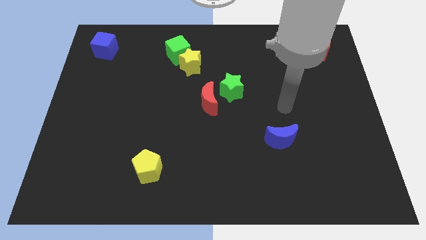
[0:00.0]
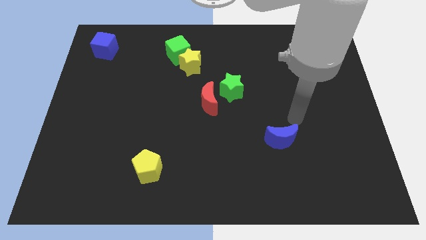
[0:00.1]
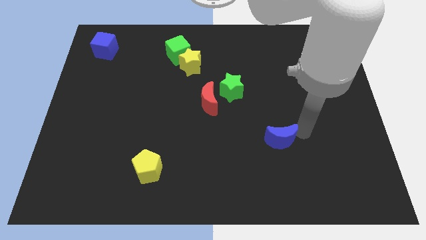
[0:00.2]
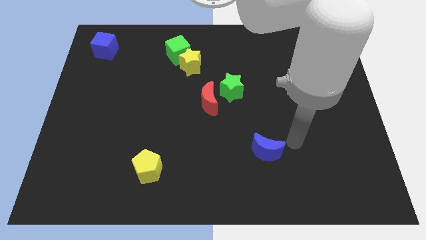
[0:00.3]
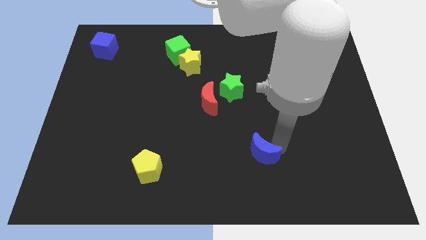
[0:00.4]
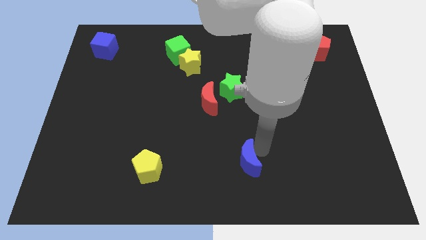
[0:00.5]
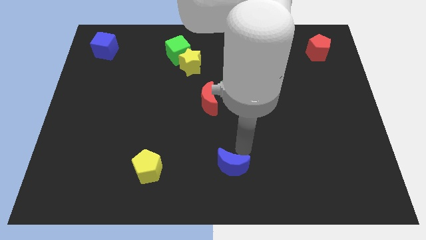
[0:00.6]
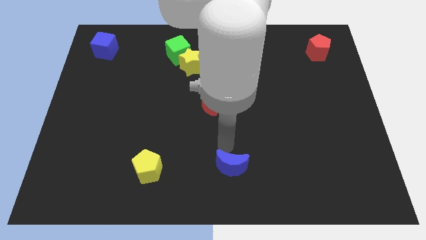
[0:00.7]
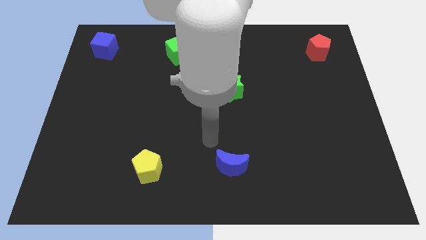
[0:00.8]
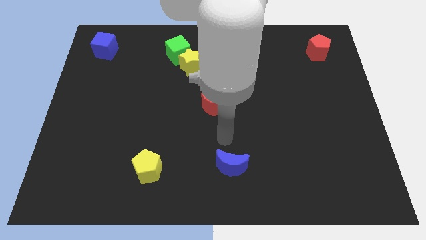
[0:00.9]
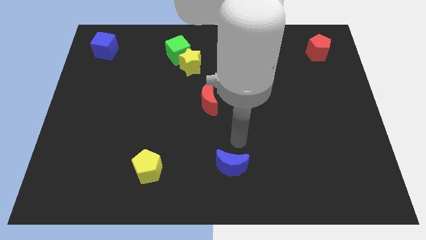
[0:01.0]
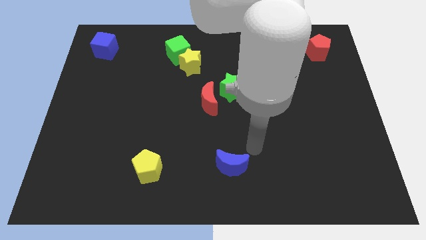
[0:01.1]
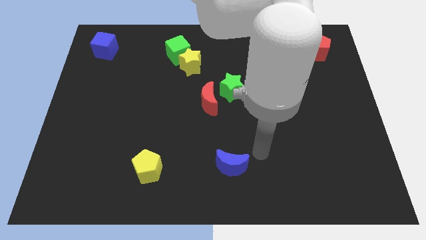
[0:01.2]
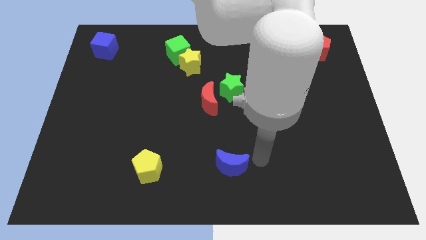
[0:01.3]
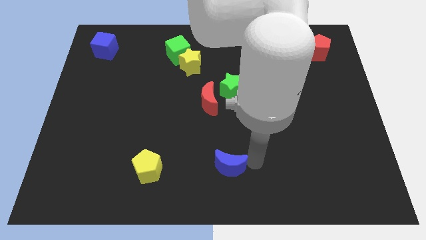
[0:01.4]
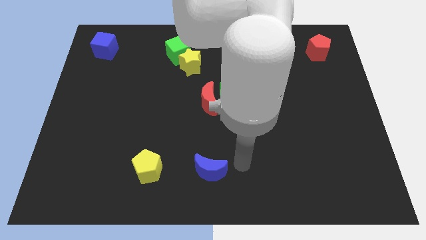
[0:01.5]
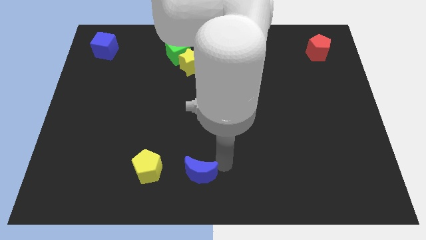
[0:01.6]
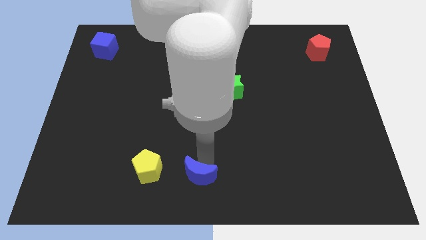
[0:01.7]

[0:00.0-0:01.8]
move the blue moon close to the yellow pentagon

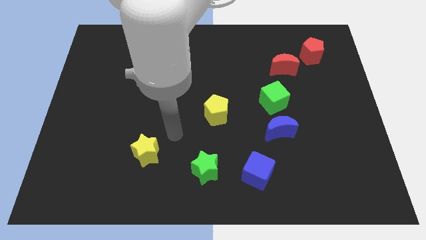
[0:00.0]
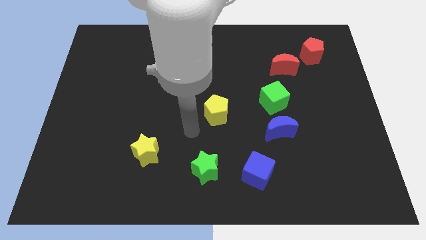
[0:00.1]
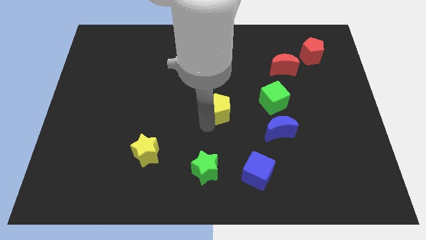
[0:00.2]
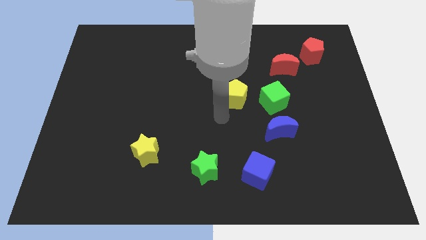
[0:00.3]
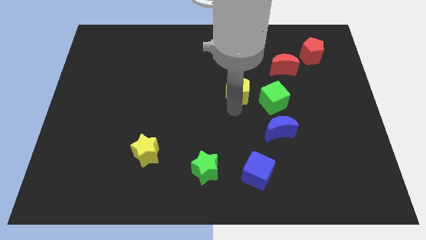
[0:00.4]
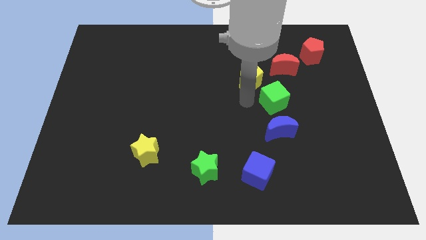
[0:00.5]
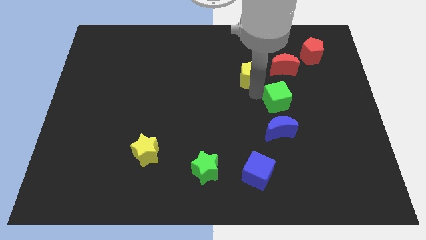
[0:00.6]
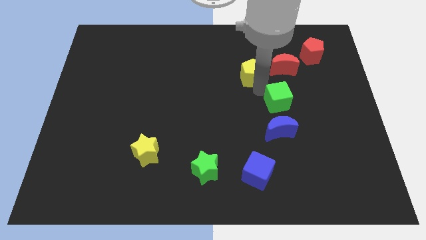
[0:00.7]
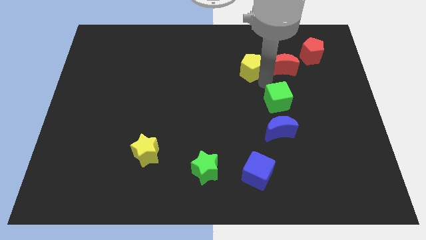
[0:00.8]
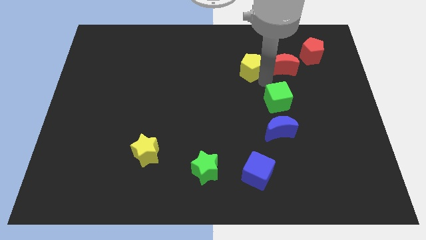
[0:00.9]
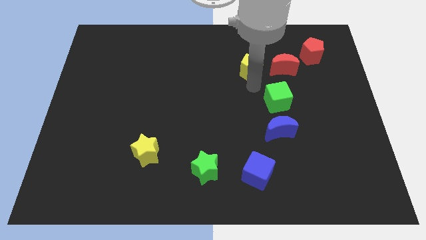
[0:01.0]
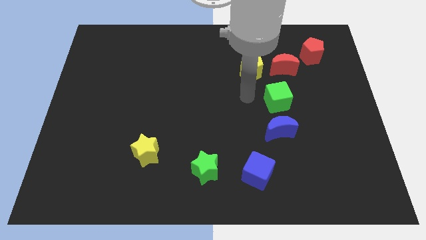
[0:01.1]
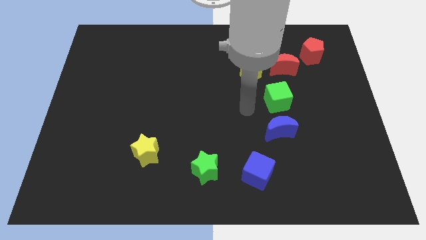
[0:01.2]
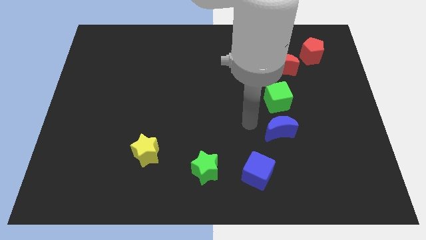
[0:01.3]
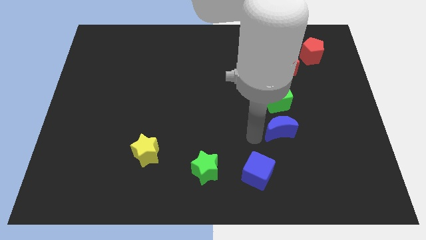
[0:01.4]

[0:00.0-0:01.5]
place the yellow pentagon to the left of red crescent

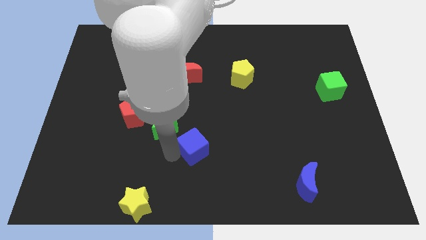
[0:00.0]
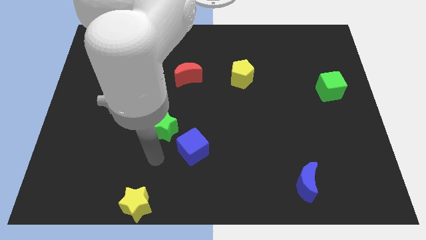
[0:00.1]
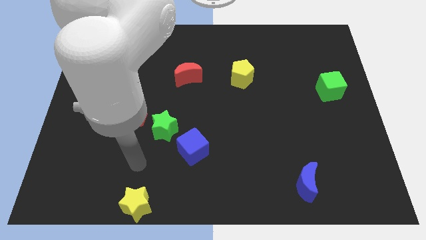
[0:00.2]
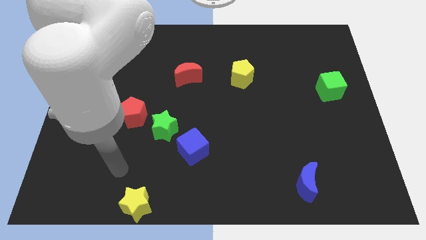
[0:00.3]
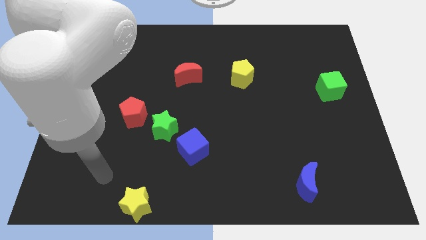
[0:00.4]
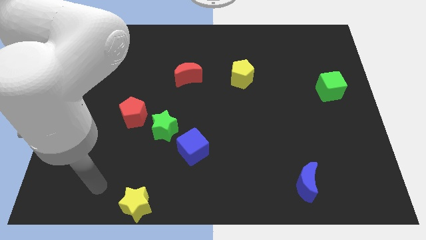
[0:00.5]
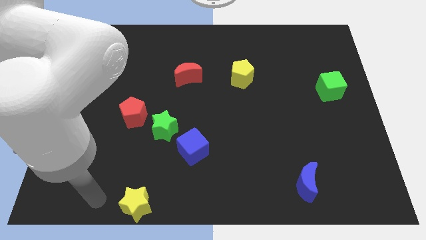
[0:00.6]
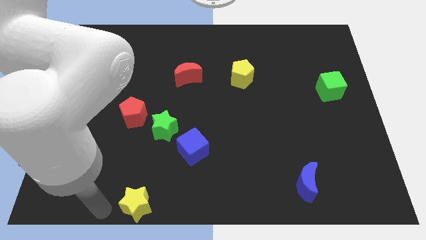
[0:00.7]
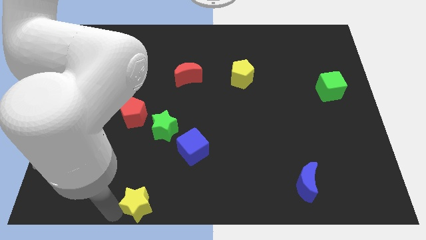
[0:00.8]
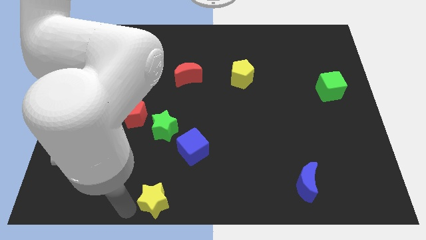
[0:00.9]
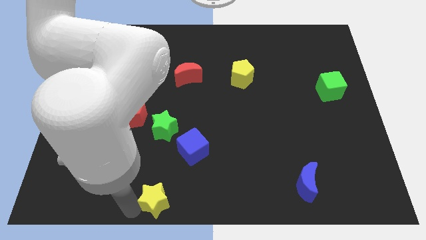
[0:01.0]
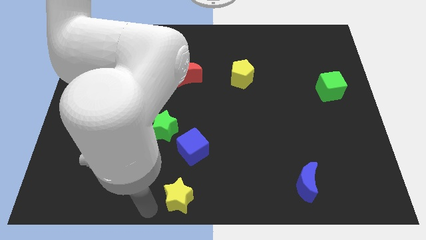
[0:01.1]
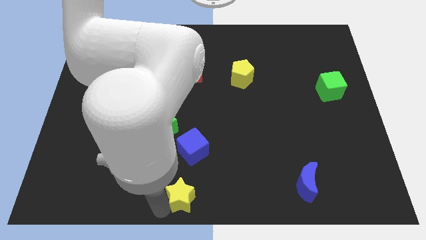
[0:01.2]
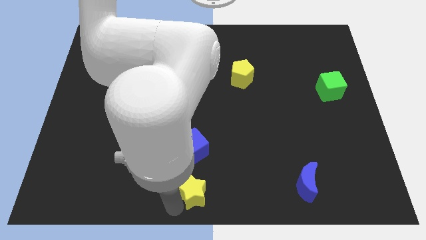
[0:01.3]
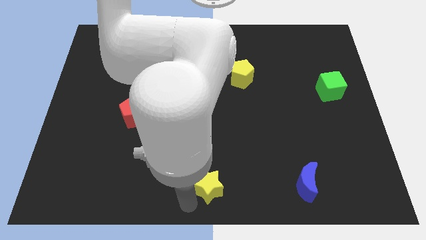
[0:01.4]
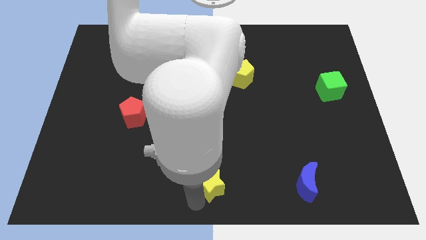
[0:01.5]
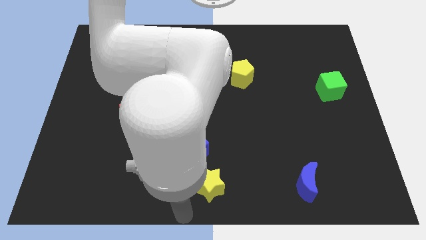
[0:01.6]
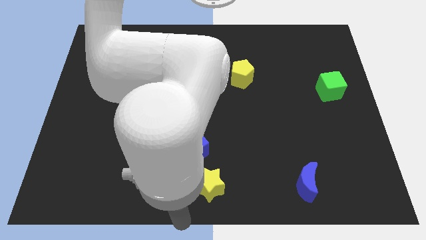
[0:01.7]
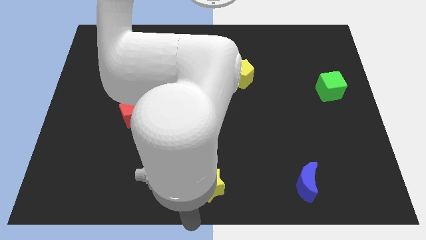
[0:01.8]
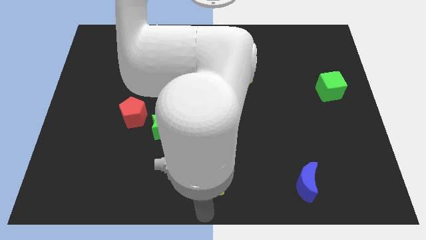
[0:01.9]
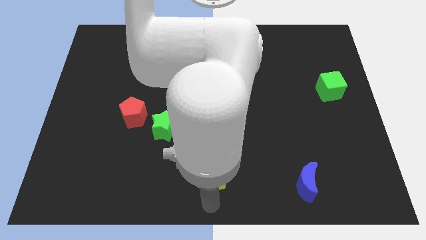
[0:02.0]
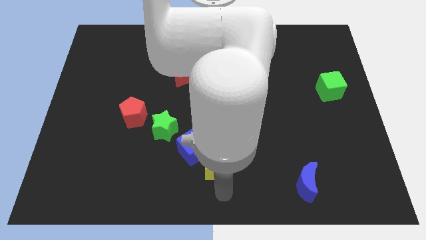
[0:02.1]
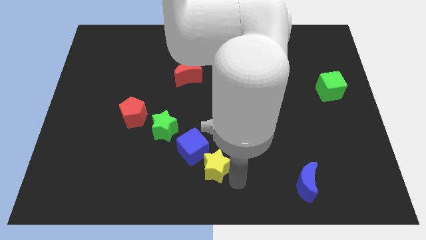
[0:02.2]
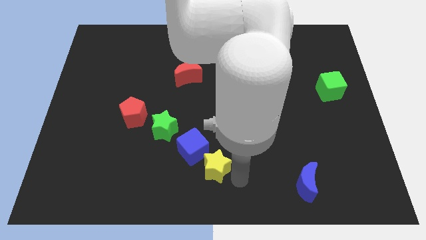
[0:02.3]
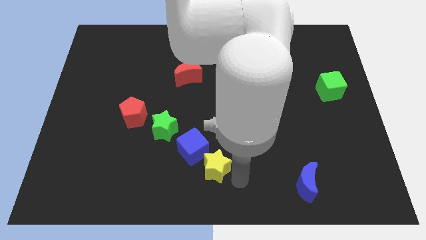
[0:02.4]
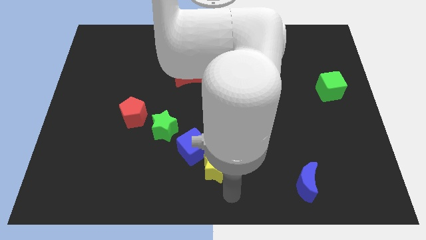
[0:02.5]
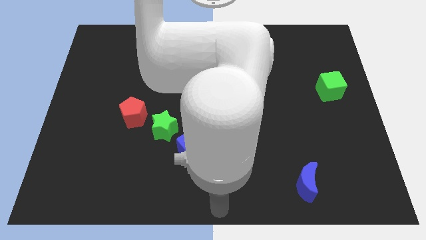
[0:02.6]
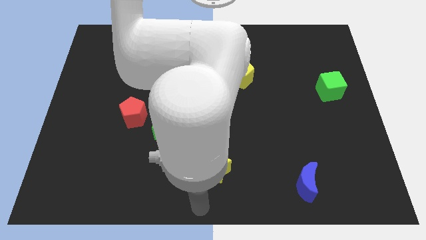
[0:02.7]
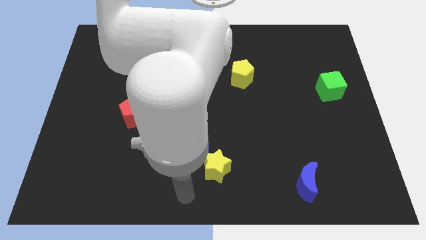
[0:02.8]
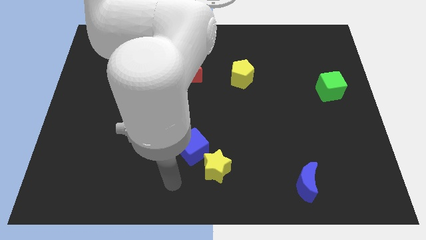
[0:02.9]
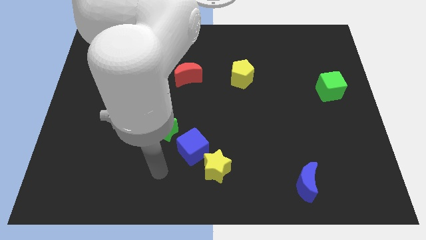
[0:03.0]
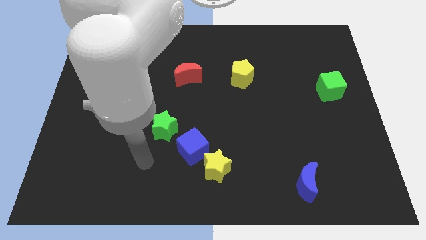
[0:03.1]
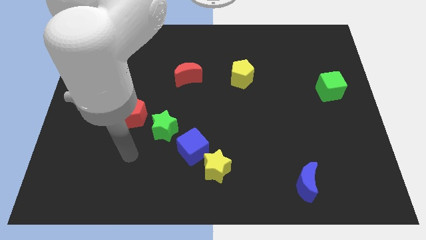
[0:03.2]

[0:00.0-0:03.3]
push the yellow star to the bottom right of the blue cube

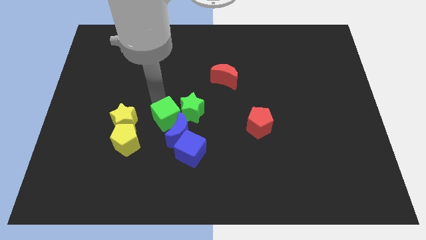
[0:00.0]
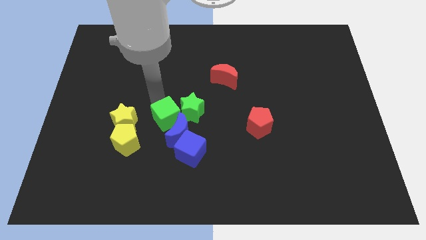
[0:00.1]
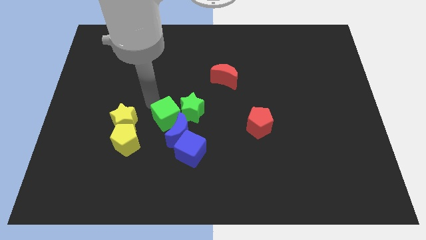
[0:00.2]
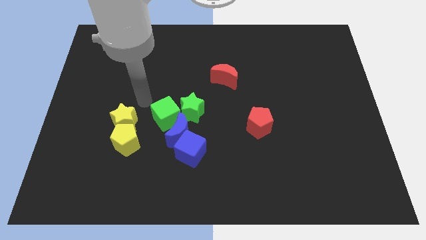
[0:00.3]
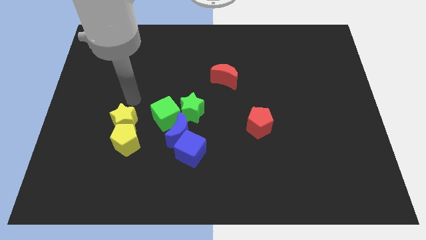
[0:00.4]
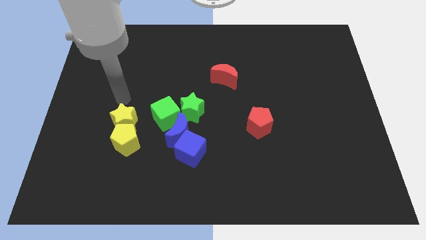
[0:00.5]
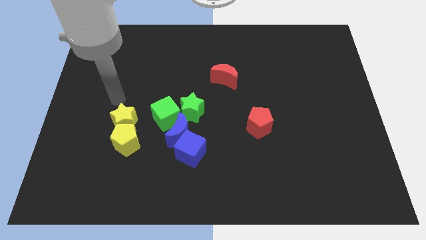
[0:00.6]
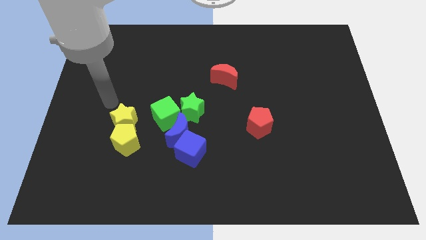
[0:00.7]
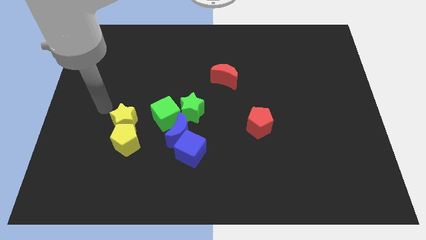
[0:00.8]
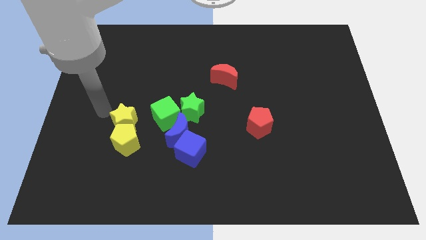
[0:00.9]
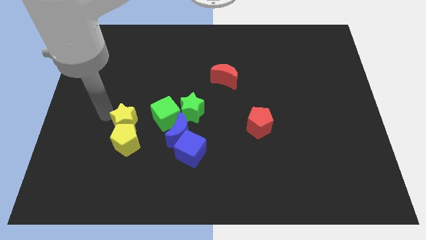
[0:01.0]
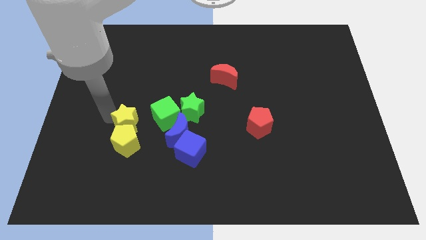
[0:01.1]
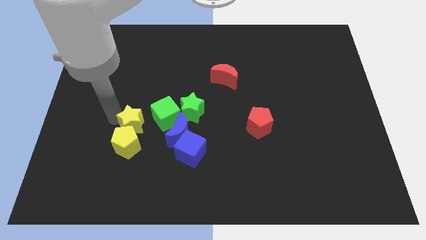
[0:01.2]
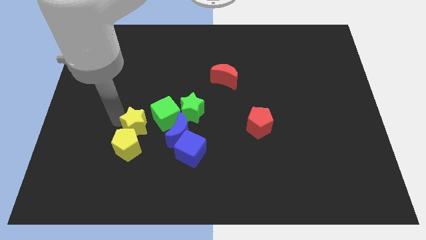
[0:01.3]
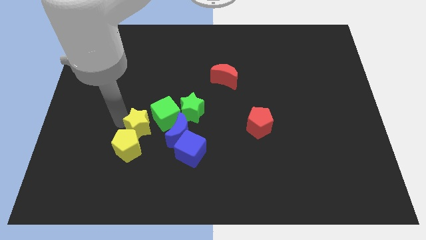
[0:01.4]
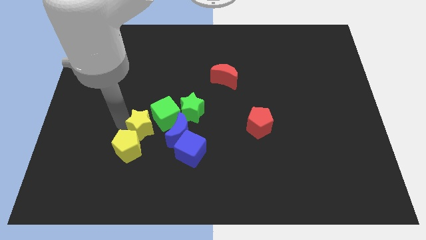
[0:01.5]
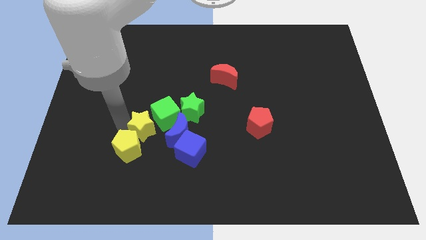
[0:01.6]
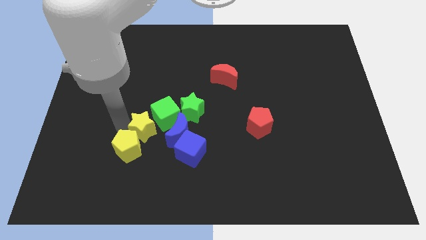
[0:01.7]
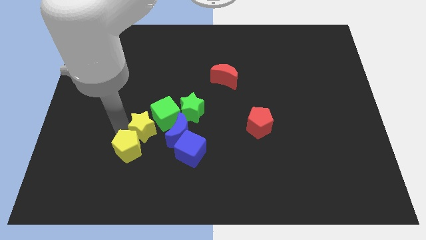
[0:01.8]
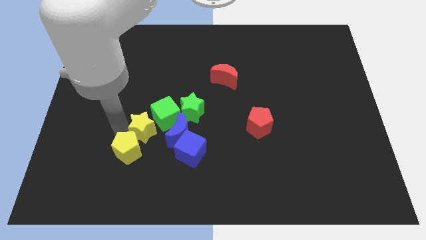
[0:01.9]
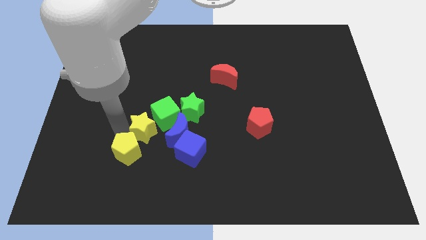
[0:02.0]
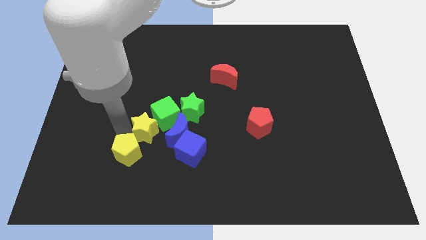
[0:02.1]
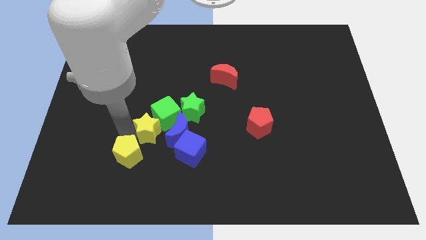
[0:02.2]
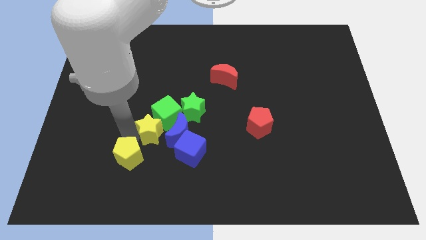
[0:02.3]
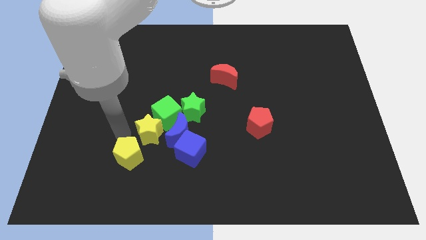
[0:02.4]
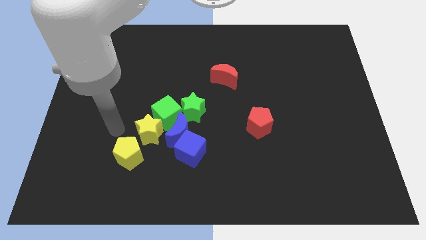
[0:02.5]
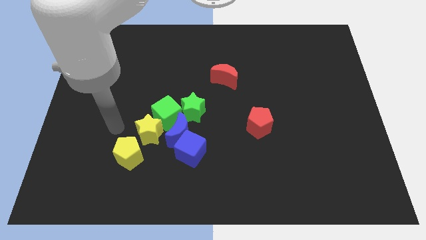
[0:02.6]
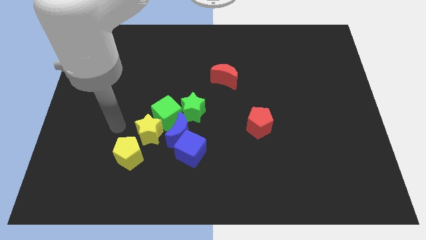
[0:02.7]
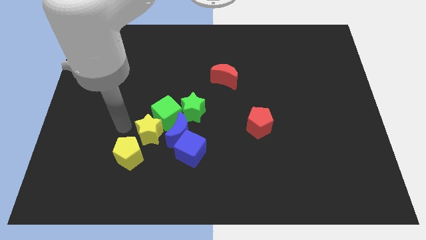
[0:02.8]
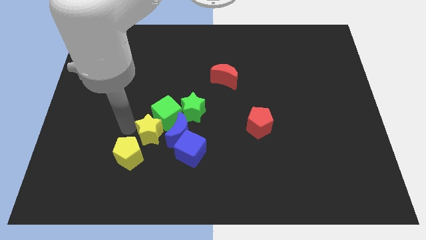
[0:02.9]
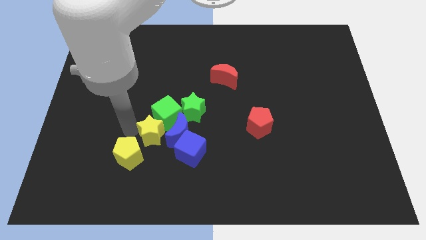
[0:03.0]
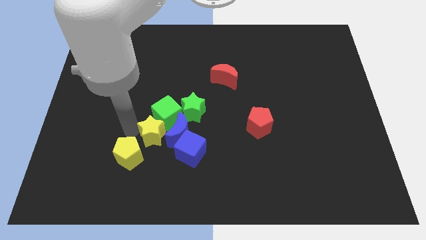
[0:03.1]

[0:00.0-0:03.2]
push the yellow star into the group of blocks
